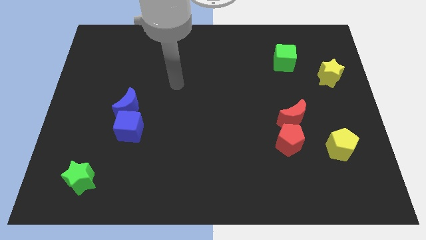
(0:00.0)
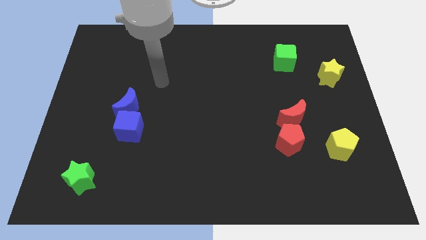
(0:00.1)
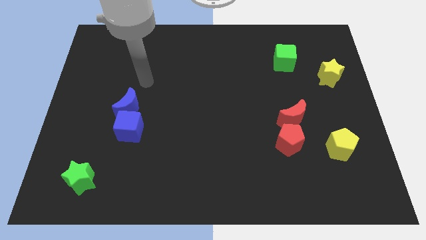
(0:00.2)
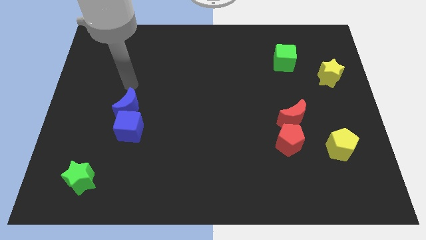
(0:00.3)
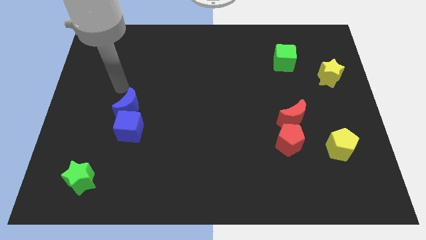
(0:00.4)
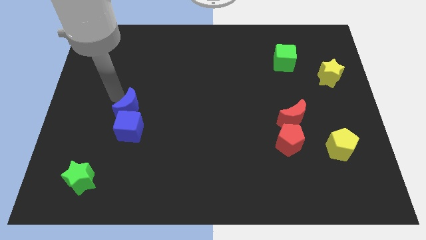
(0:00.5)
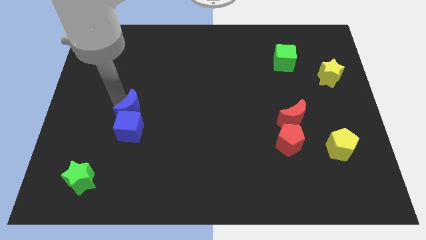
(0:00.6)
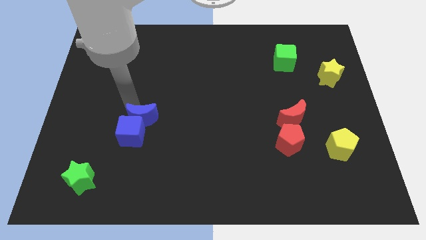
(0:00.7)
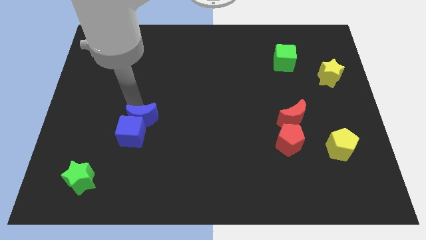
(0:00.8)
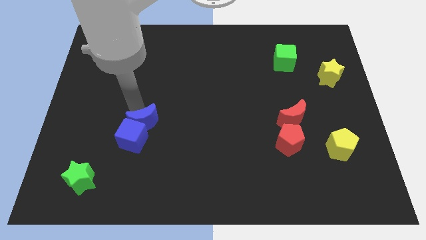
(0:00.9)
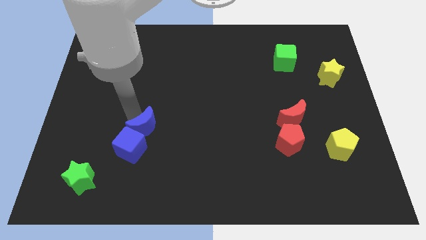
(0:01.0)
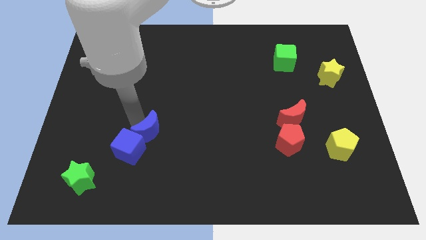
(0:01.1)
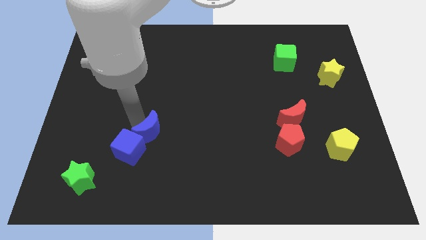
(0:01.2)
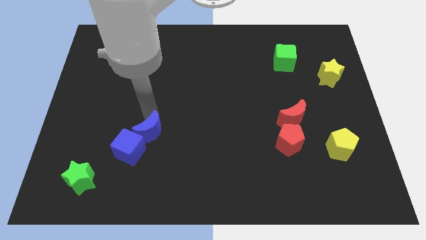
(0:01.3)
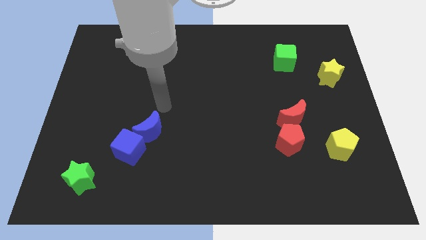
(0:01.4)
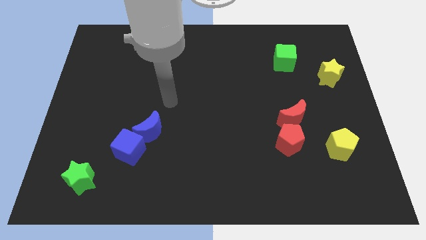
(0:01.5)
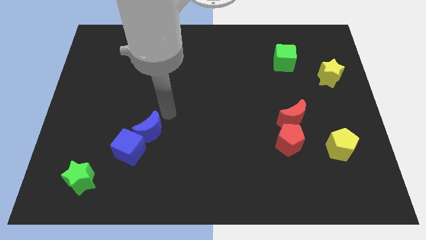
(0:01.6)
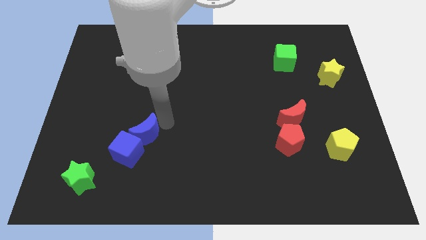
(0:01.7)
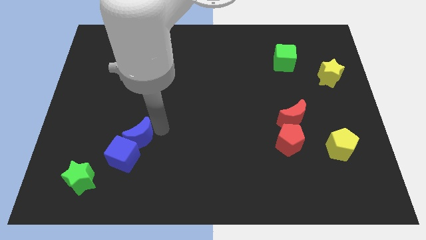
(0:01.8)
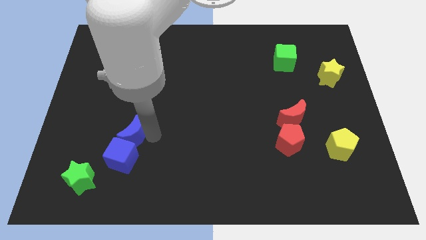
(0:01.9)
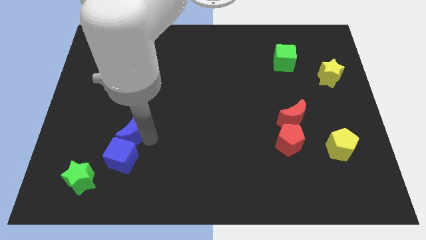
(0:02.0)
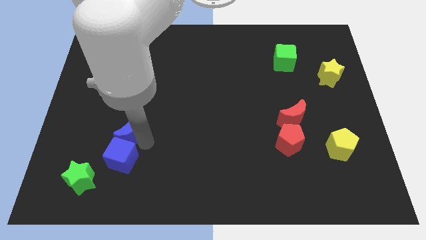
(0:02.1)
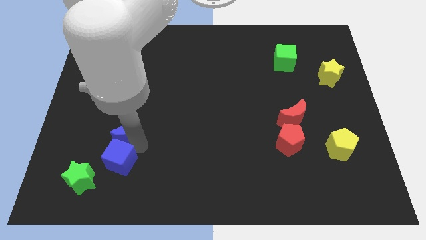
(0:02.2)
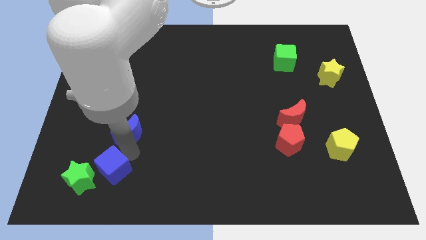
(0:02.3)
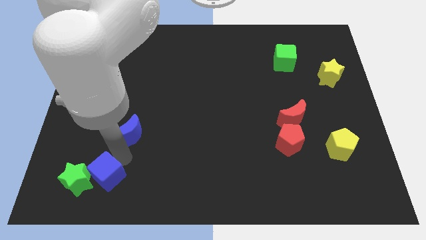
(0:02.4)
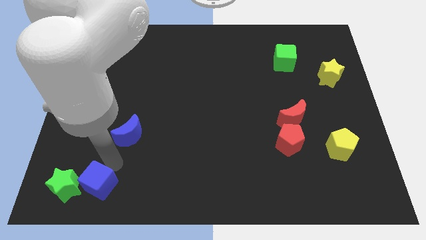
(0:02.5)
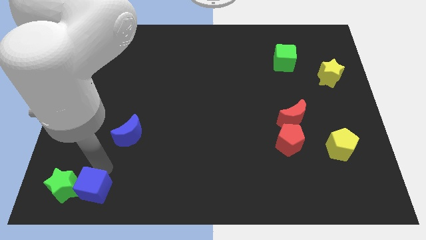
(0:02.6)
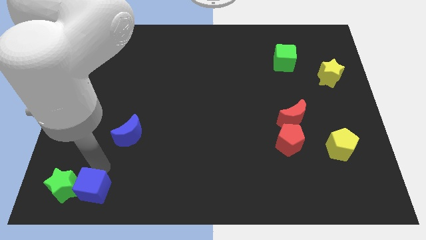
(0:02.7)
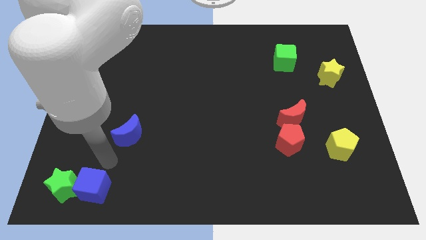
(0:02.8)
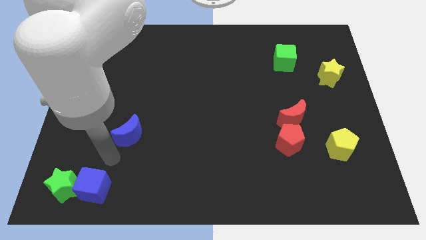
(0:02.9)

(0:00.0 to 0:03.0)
place the blue cube right to the green star

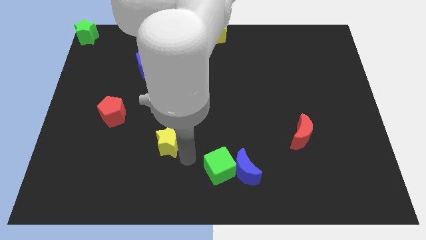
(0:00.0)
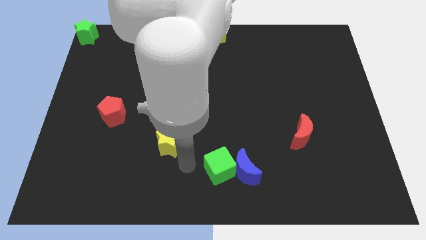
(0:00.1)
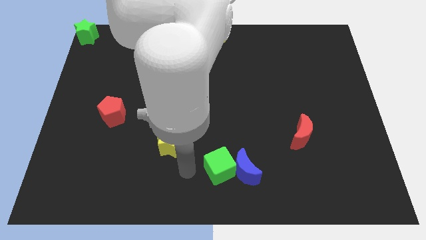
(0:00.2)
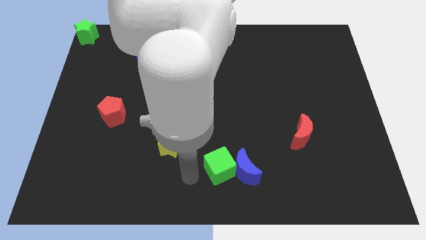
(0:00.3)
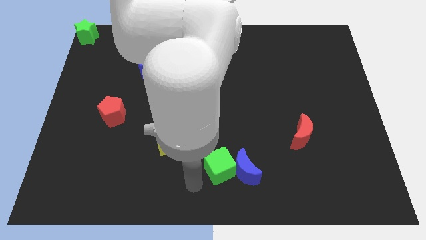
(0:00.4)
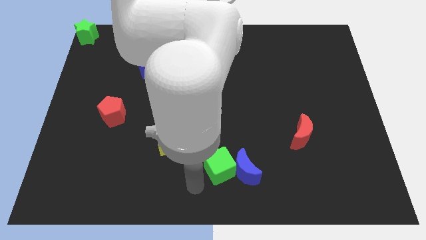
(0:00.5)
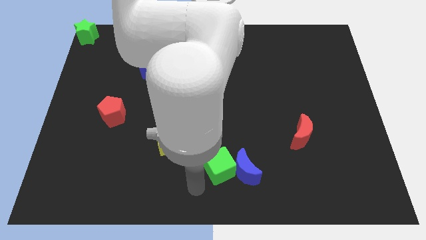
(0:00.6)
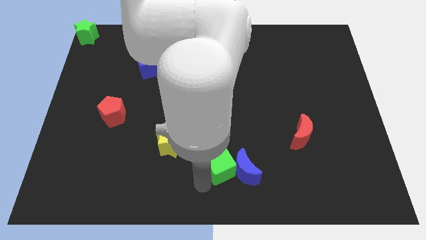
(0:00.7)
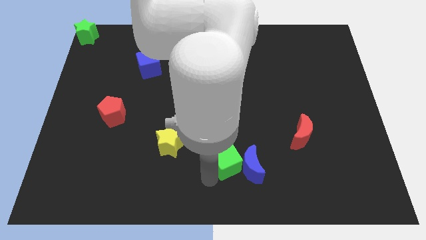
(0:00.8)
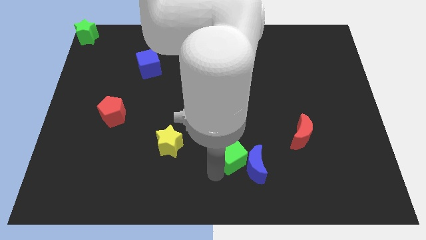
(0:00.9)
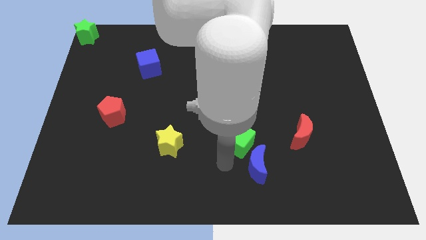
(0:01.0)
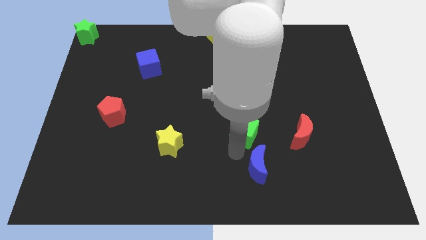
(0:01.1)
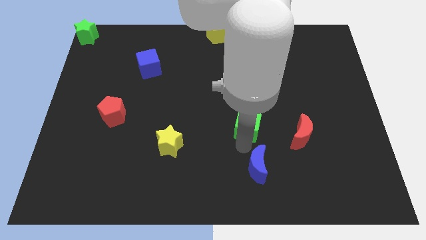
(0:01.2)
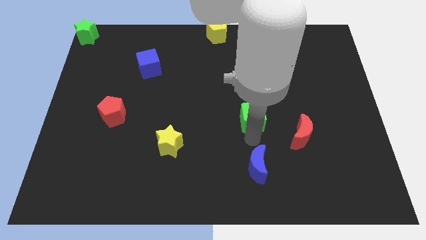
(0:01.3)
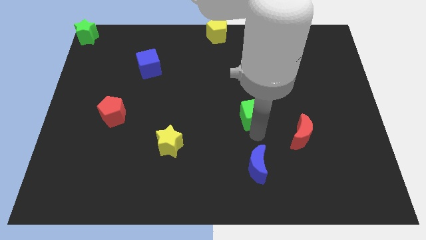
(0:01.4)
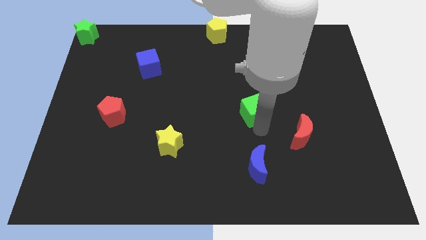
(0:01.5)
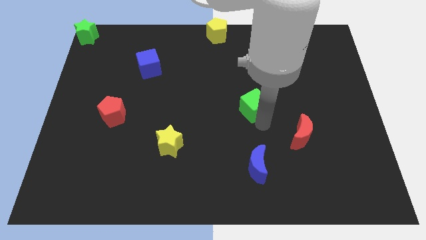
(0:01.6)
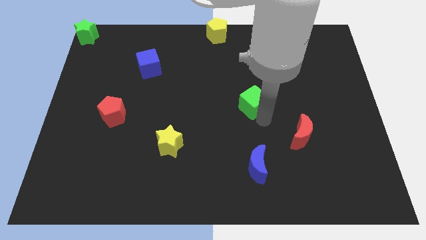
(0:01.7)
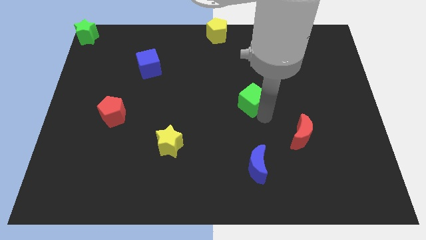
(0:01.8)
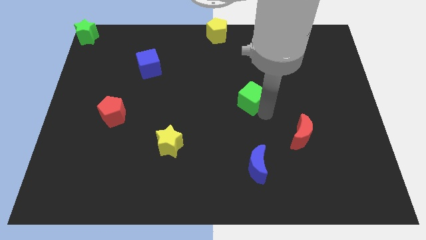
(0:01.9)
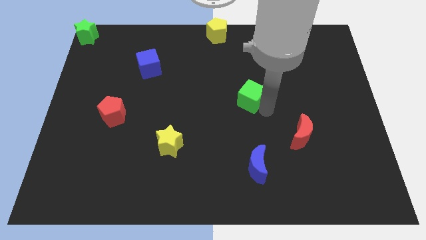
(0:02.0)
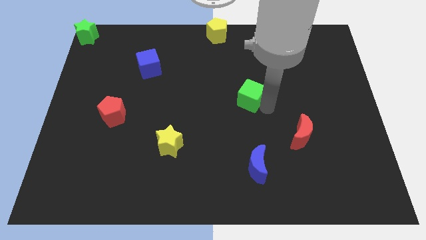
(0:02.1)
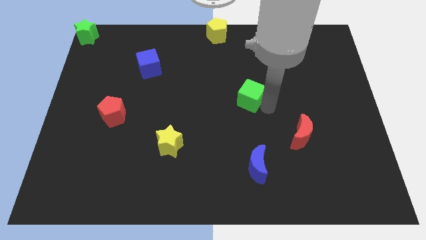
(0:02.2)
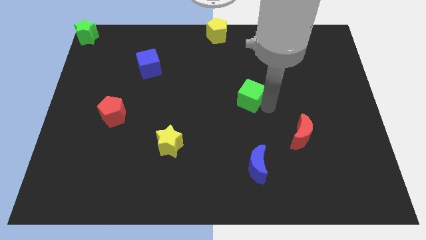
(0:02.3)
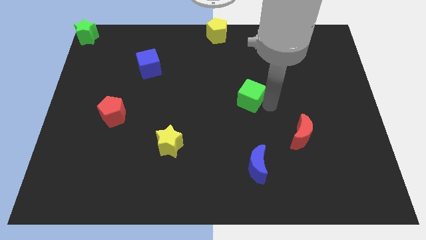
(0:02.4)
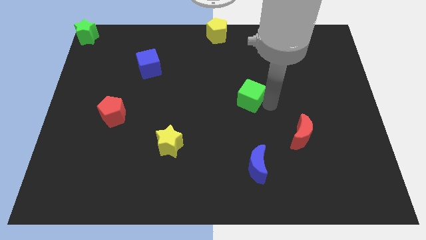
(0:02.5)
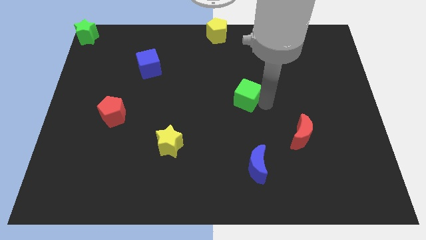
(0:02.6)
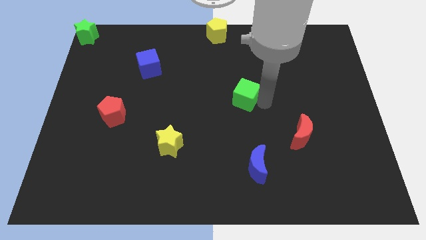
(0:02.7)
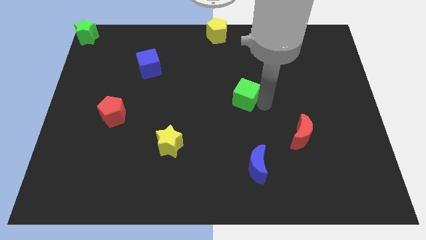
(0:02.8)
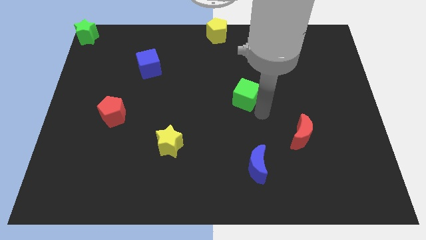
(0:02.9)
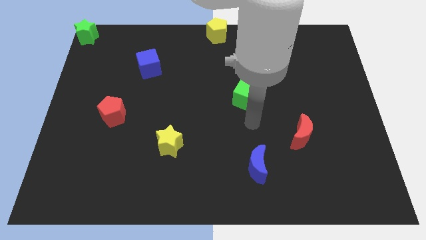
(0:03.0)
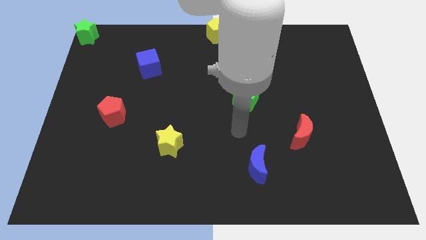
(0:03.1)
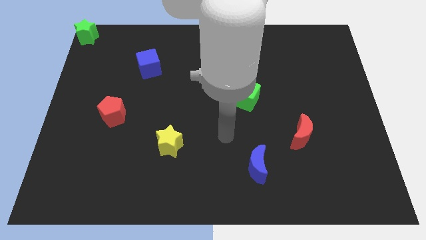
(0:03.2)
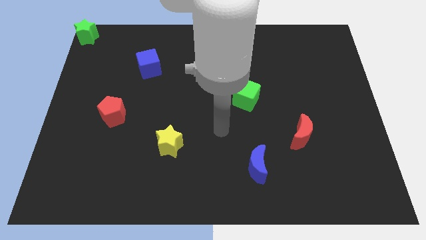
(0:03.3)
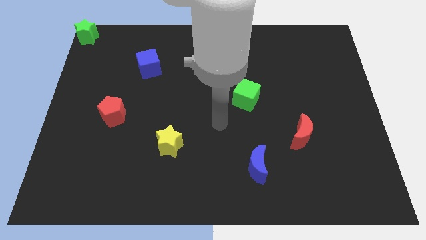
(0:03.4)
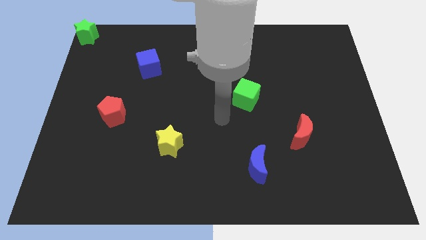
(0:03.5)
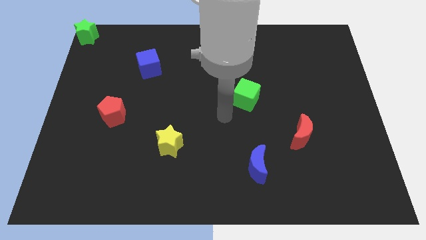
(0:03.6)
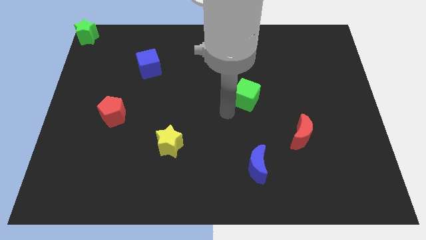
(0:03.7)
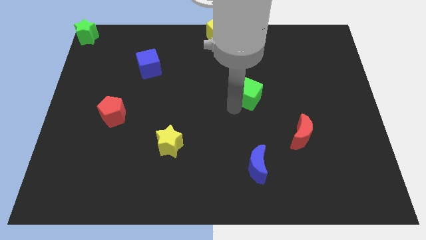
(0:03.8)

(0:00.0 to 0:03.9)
push the green cube to the top of the blue crescent

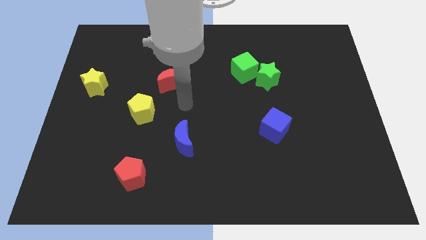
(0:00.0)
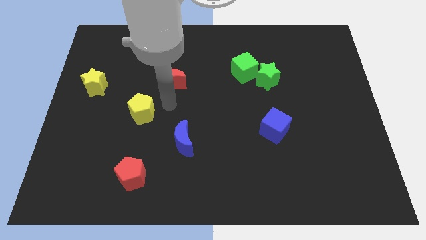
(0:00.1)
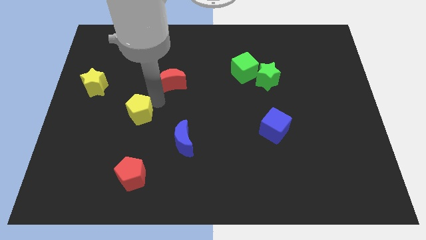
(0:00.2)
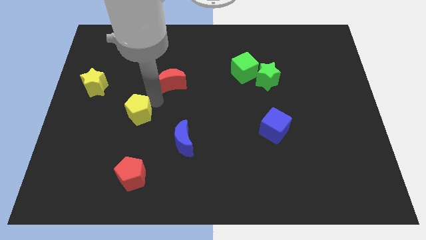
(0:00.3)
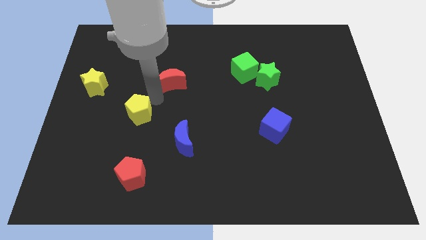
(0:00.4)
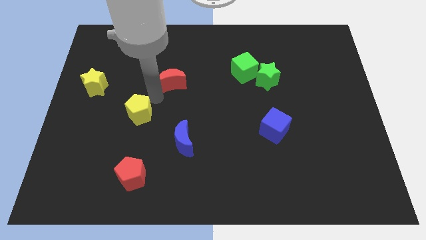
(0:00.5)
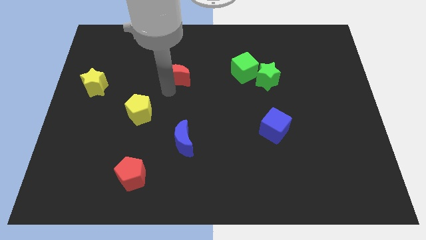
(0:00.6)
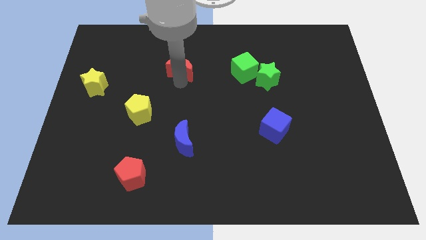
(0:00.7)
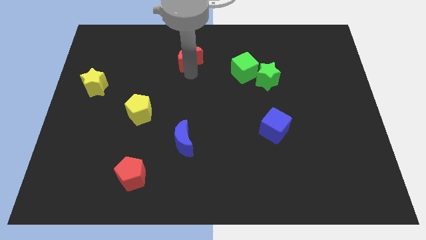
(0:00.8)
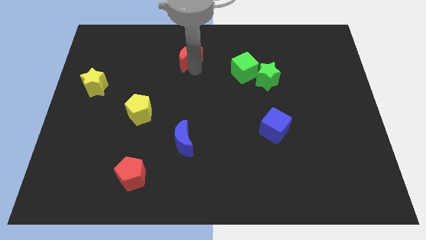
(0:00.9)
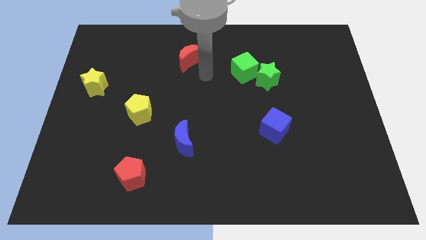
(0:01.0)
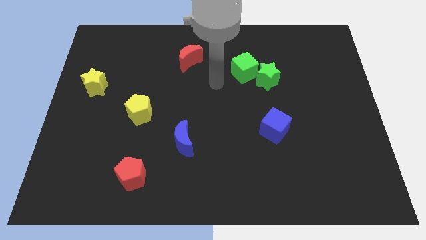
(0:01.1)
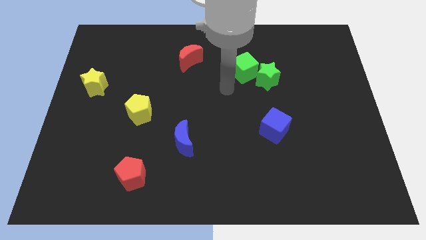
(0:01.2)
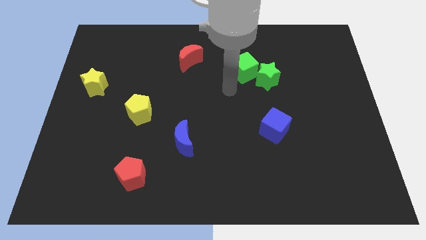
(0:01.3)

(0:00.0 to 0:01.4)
push the red moon to the top center

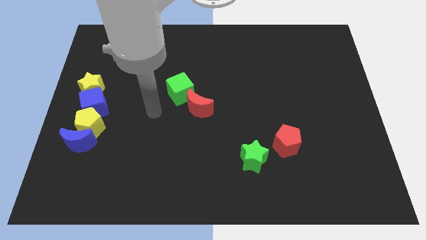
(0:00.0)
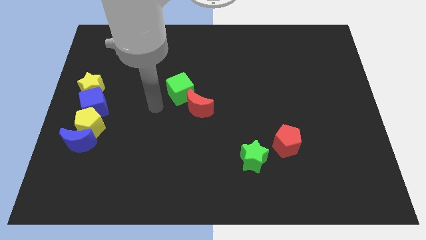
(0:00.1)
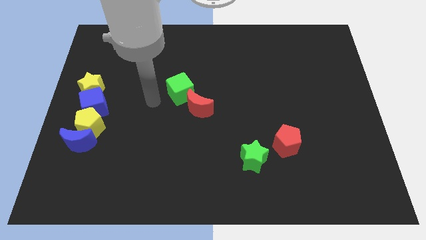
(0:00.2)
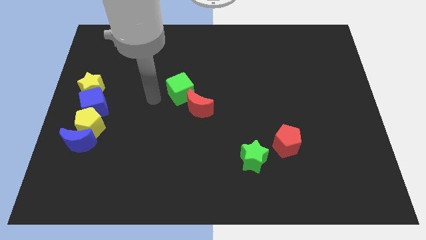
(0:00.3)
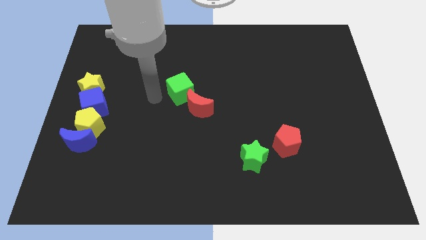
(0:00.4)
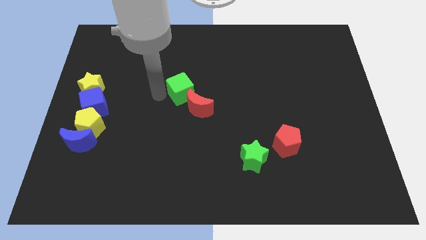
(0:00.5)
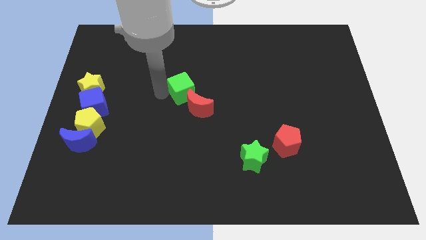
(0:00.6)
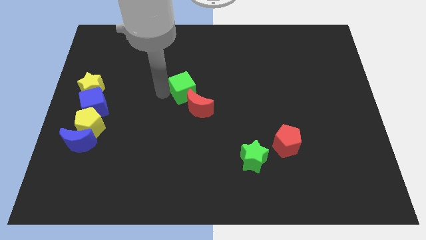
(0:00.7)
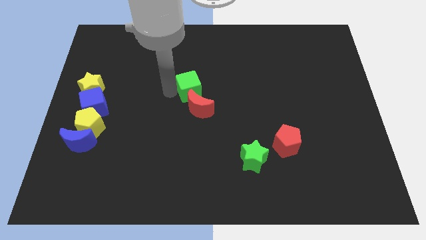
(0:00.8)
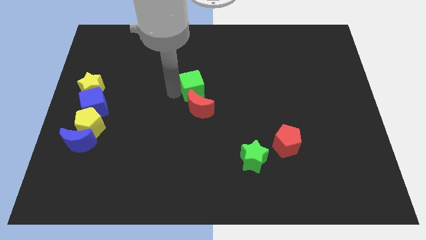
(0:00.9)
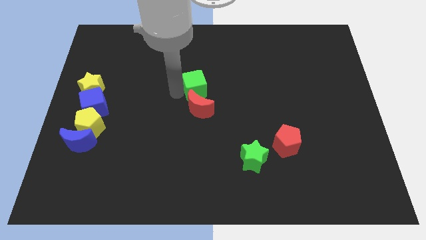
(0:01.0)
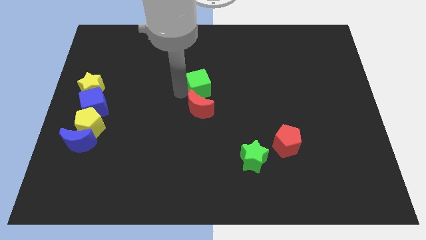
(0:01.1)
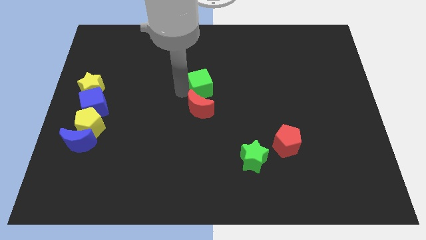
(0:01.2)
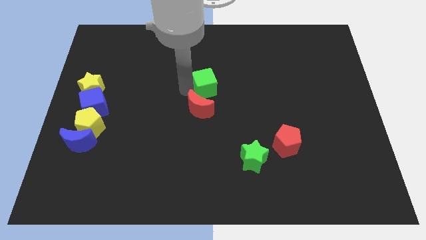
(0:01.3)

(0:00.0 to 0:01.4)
push the green cube to the top side of the red crescent
